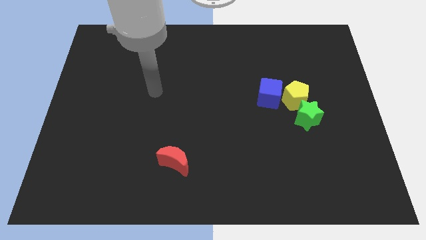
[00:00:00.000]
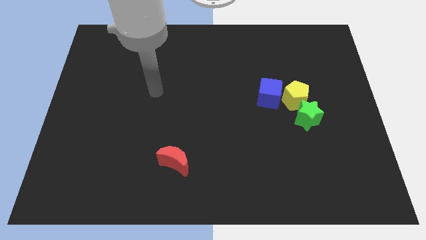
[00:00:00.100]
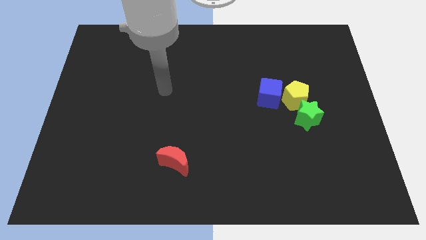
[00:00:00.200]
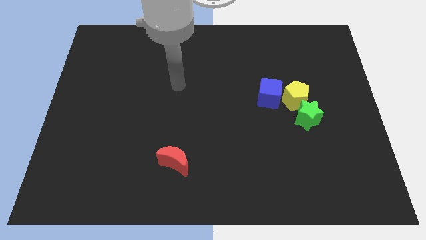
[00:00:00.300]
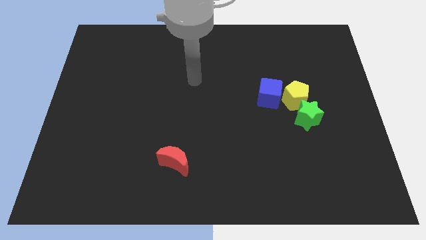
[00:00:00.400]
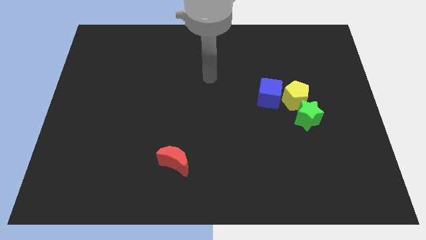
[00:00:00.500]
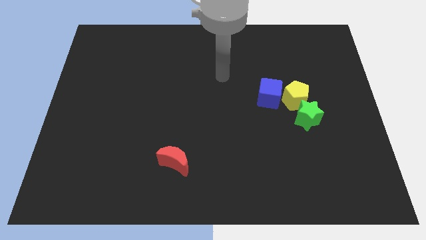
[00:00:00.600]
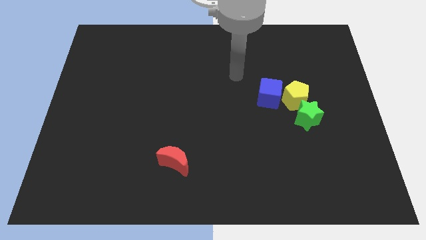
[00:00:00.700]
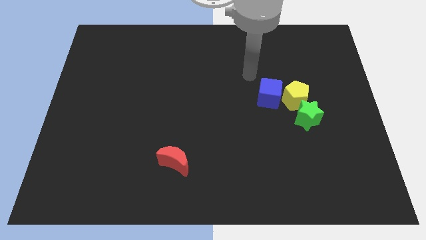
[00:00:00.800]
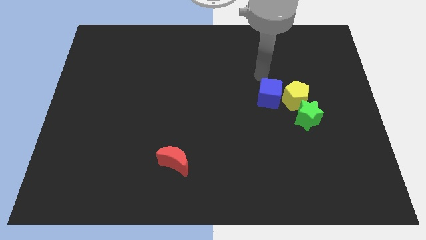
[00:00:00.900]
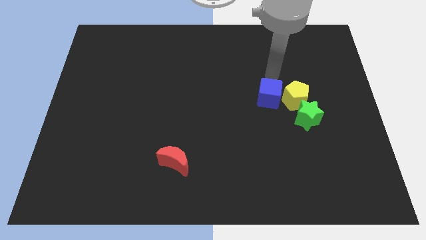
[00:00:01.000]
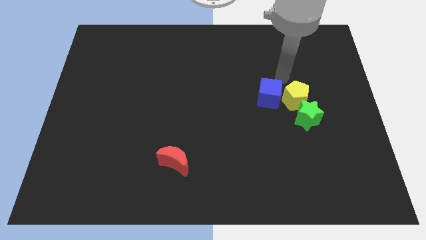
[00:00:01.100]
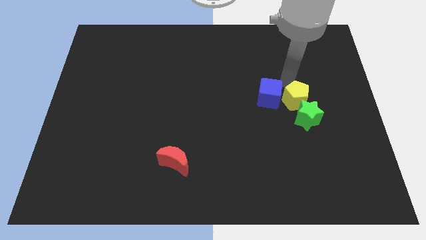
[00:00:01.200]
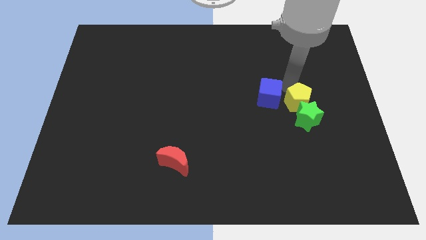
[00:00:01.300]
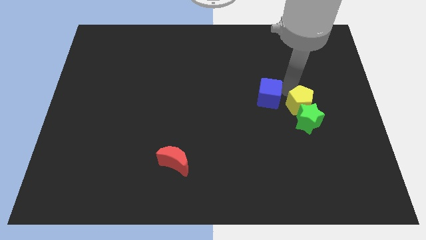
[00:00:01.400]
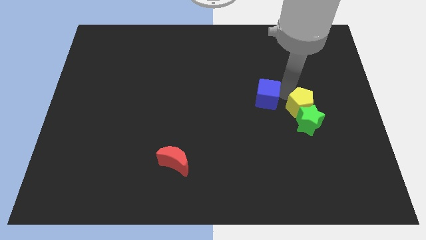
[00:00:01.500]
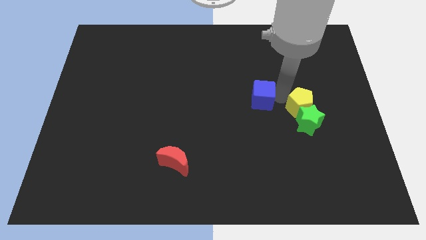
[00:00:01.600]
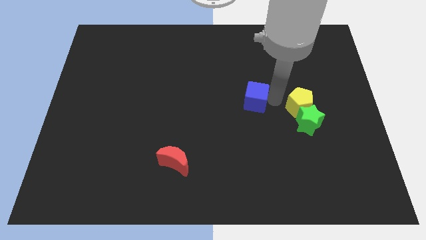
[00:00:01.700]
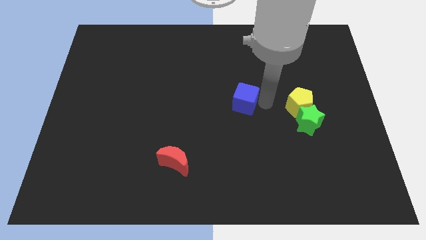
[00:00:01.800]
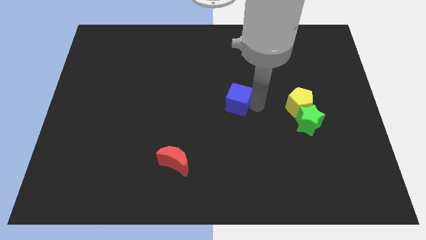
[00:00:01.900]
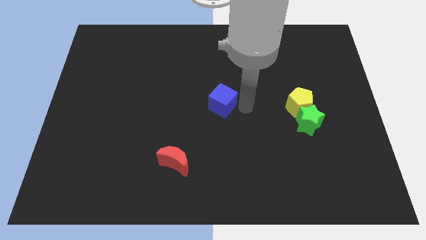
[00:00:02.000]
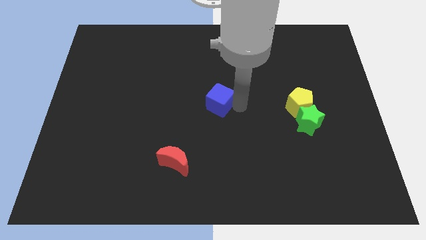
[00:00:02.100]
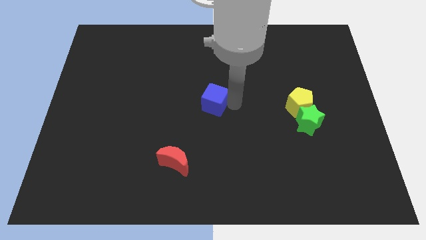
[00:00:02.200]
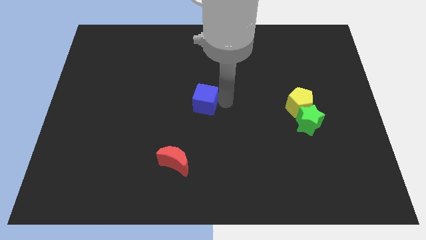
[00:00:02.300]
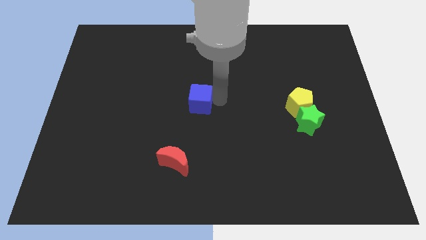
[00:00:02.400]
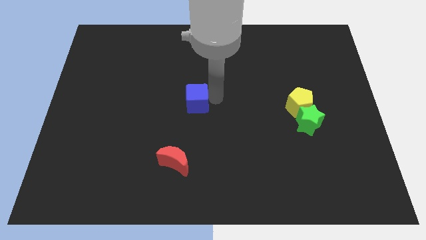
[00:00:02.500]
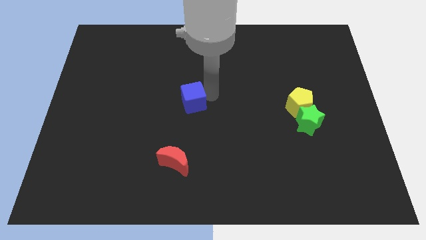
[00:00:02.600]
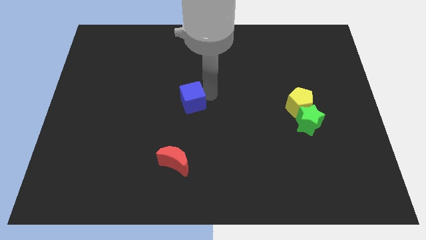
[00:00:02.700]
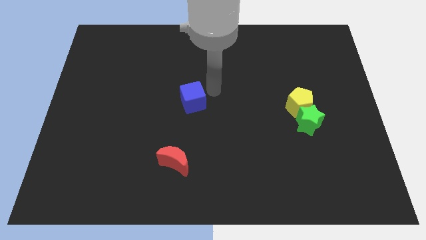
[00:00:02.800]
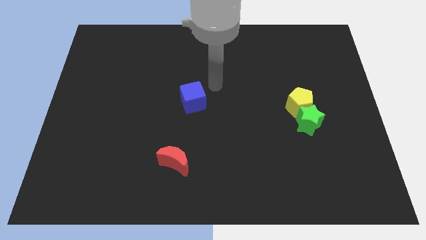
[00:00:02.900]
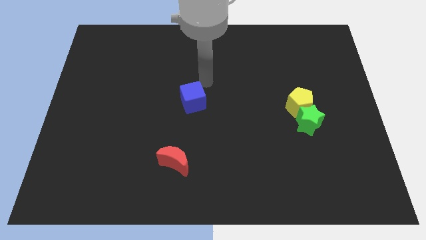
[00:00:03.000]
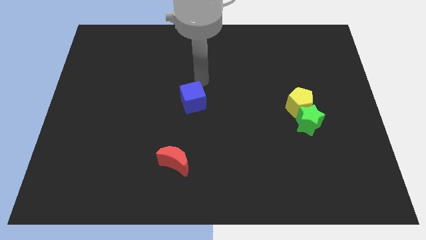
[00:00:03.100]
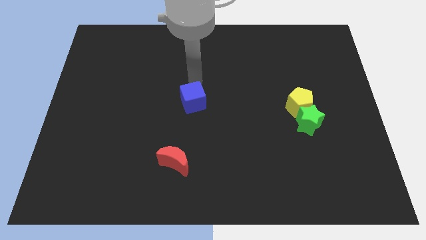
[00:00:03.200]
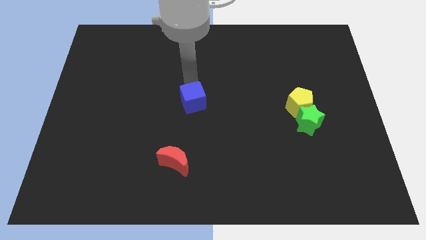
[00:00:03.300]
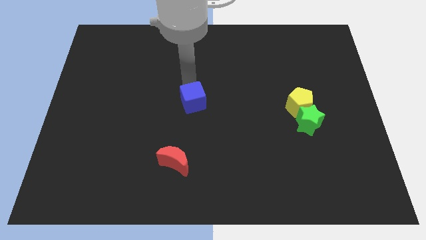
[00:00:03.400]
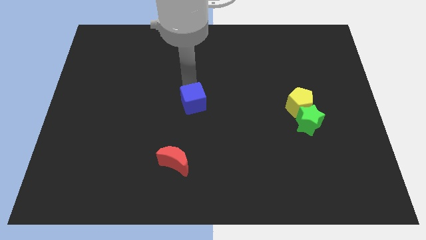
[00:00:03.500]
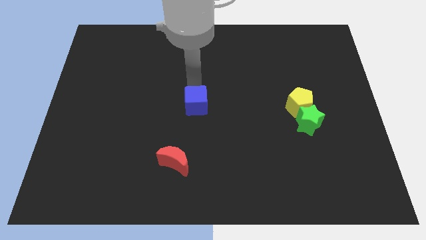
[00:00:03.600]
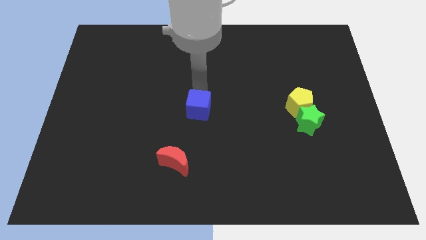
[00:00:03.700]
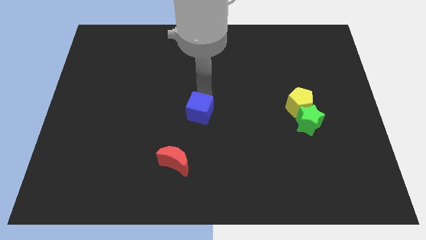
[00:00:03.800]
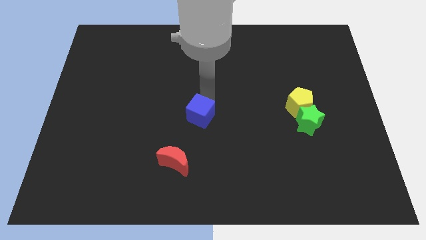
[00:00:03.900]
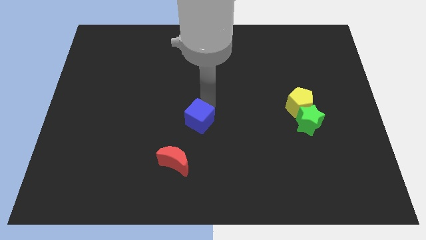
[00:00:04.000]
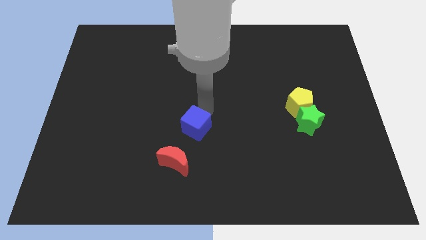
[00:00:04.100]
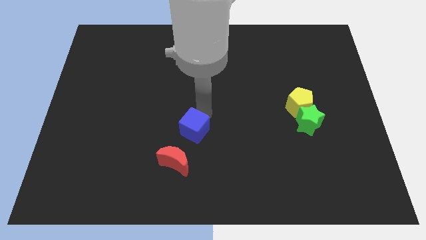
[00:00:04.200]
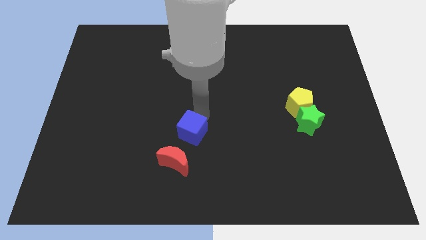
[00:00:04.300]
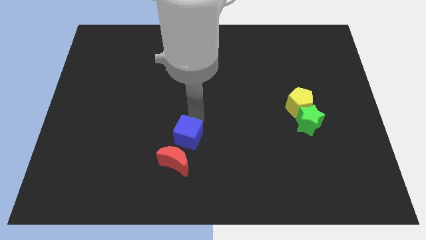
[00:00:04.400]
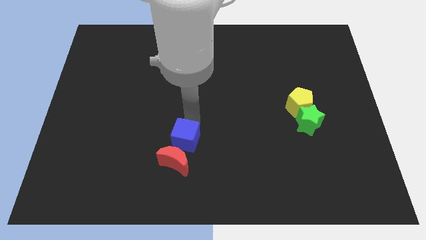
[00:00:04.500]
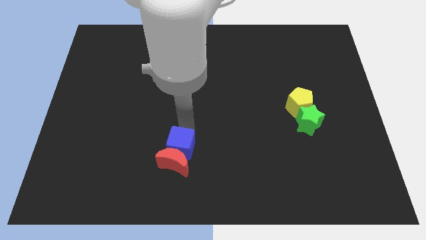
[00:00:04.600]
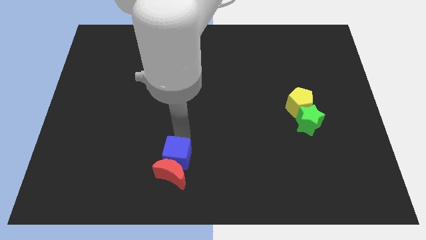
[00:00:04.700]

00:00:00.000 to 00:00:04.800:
put the blue cube to the moon

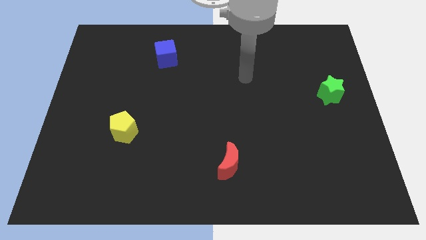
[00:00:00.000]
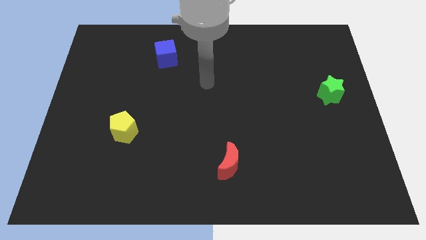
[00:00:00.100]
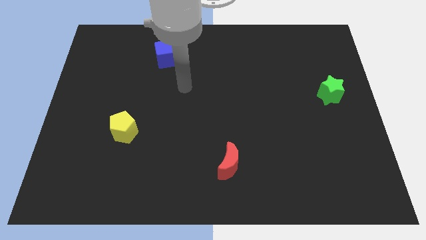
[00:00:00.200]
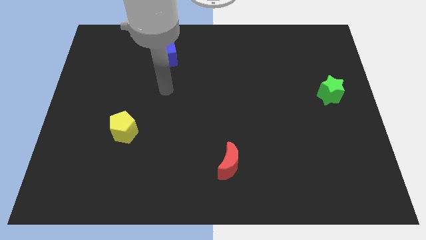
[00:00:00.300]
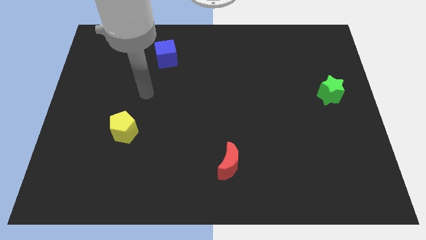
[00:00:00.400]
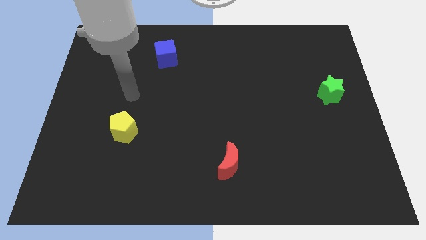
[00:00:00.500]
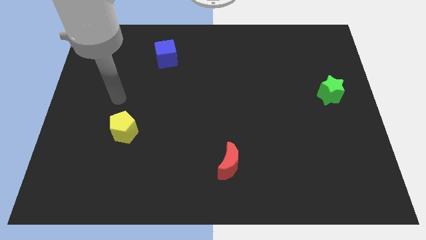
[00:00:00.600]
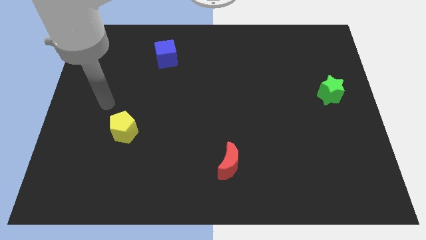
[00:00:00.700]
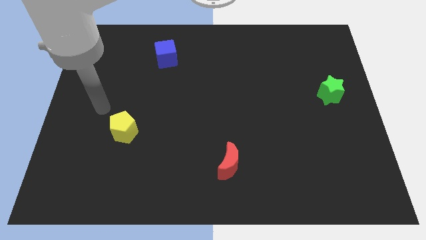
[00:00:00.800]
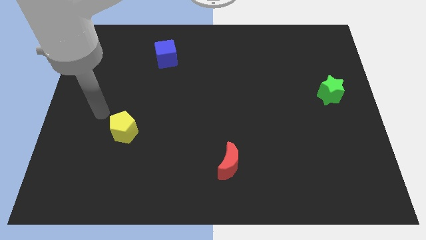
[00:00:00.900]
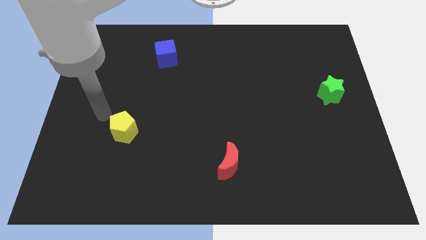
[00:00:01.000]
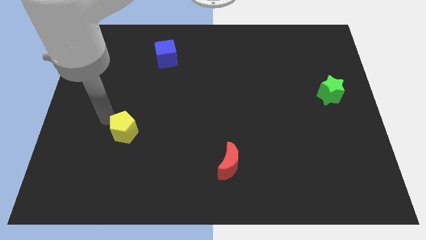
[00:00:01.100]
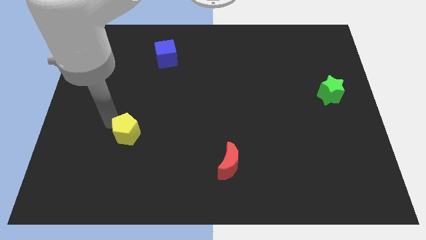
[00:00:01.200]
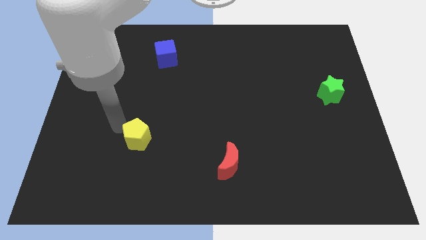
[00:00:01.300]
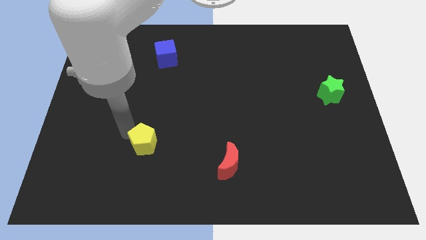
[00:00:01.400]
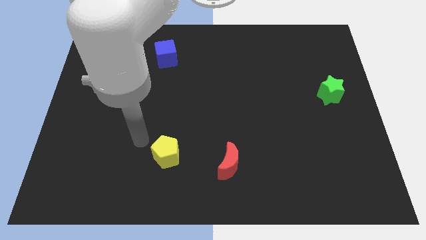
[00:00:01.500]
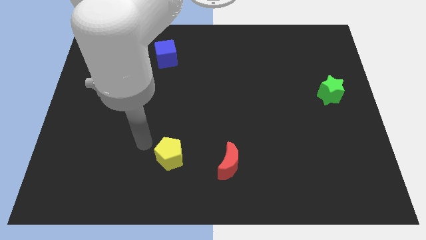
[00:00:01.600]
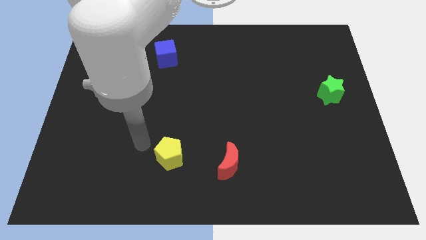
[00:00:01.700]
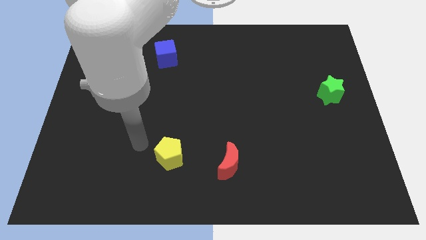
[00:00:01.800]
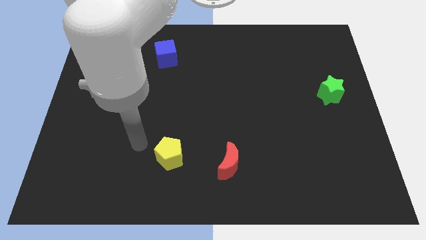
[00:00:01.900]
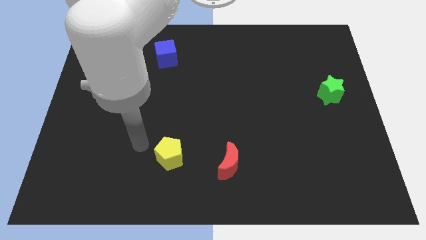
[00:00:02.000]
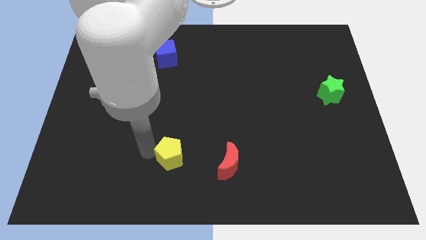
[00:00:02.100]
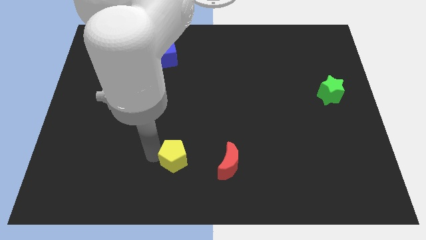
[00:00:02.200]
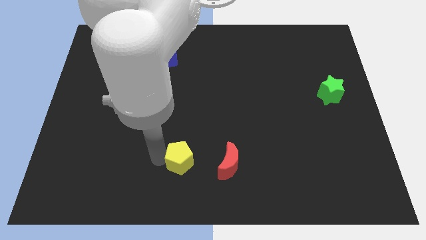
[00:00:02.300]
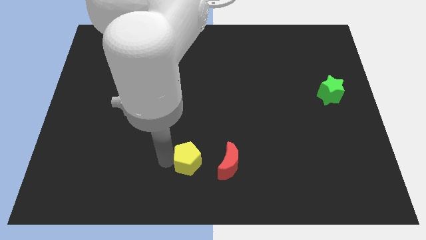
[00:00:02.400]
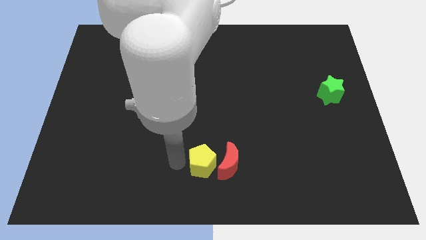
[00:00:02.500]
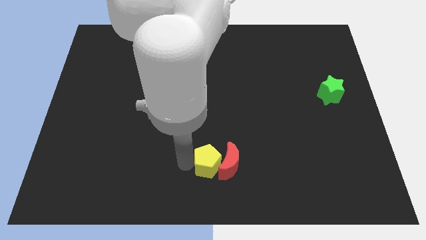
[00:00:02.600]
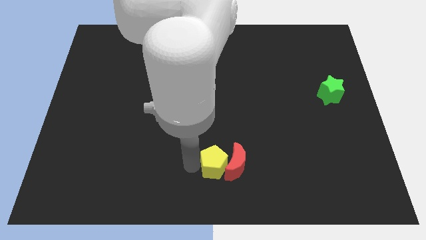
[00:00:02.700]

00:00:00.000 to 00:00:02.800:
put the yellow block to the red block

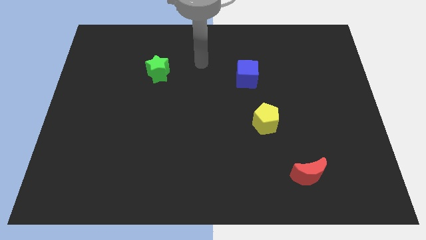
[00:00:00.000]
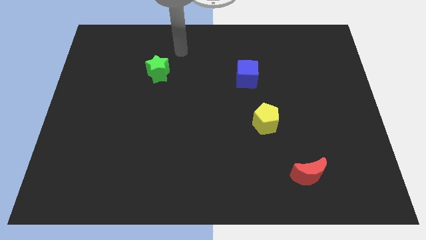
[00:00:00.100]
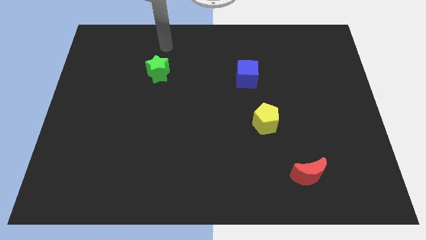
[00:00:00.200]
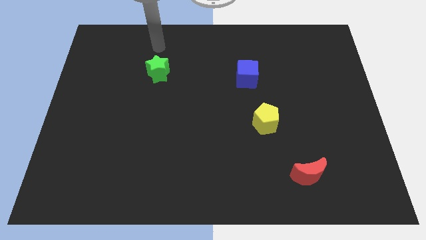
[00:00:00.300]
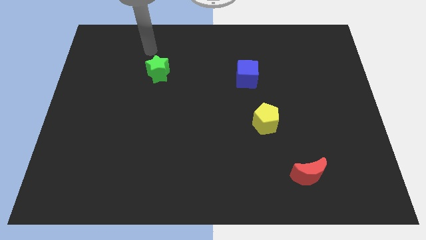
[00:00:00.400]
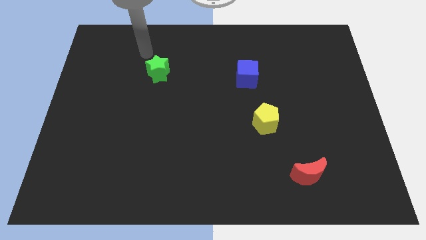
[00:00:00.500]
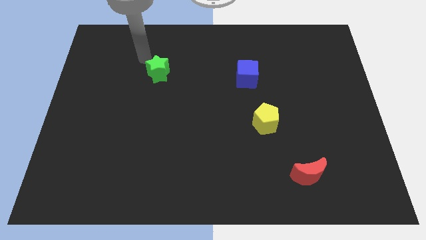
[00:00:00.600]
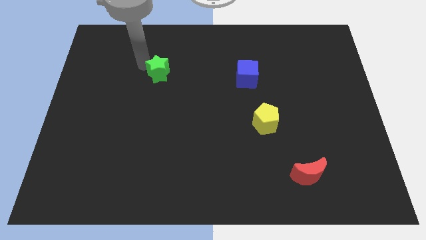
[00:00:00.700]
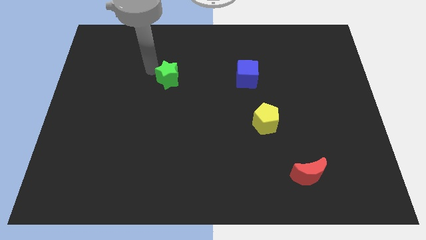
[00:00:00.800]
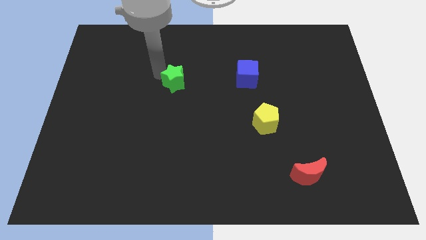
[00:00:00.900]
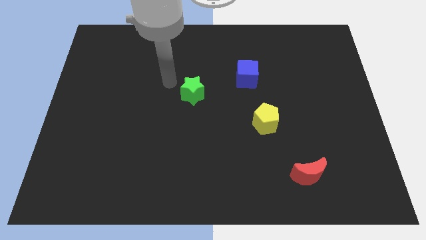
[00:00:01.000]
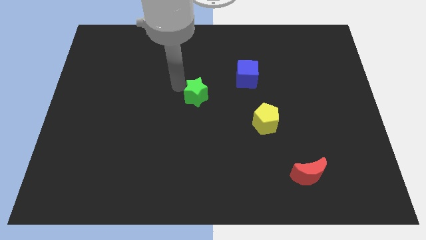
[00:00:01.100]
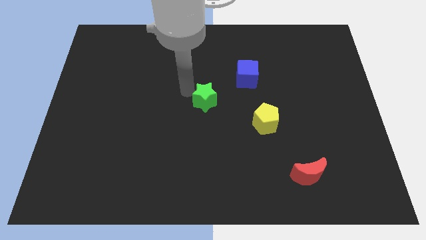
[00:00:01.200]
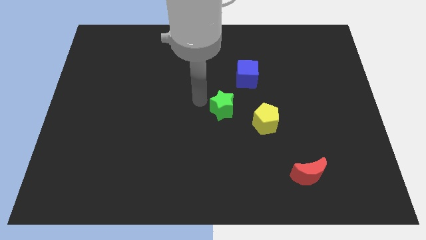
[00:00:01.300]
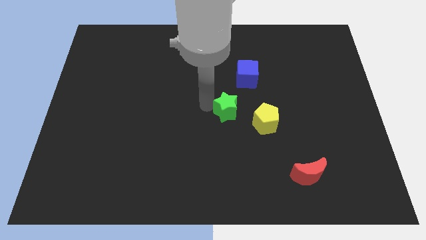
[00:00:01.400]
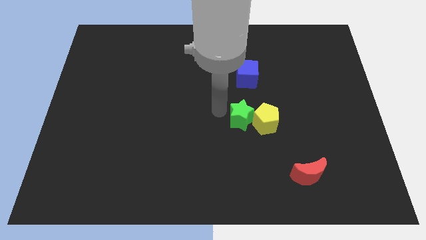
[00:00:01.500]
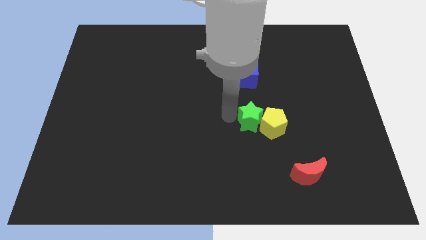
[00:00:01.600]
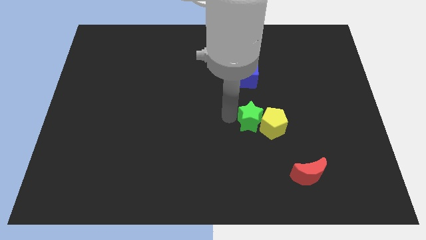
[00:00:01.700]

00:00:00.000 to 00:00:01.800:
put the green block towards the pentagon
